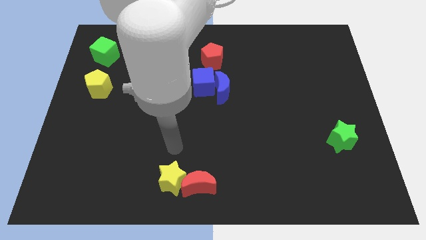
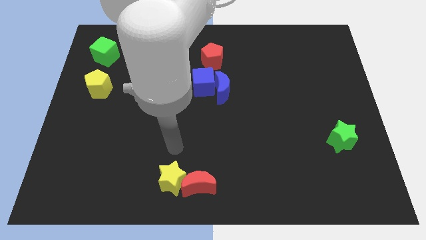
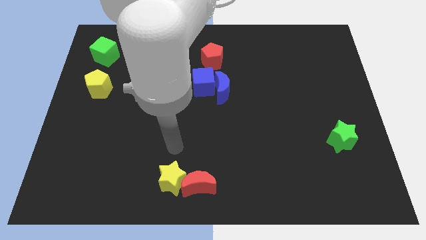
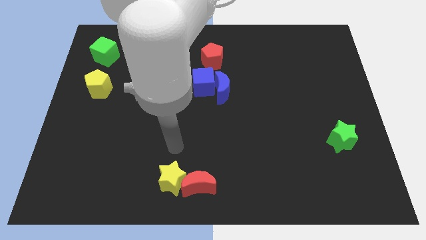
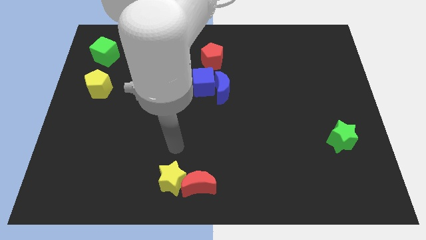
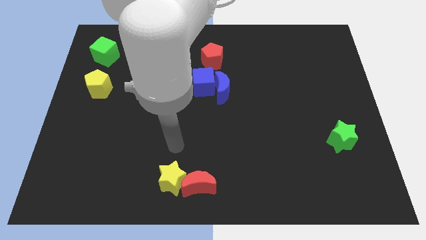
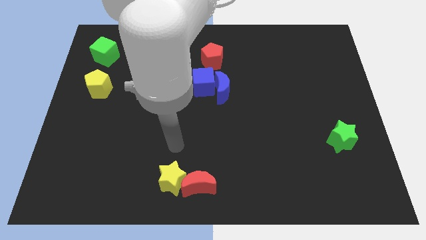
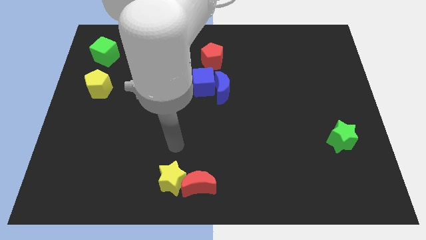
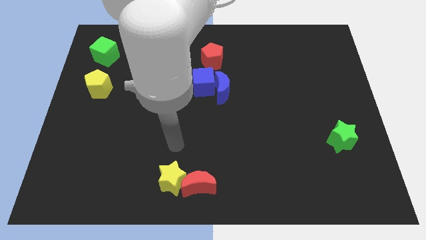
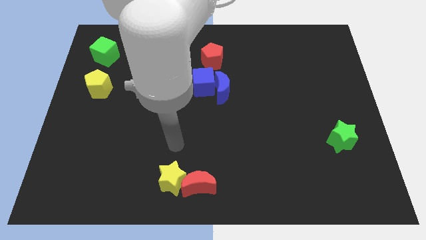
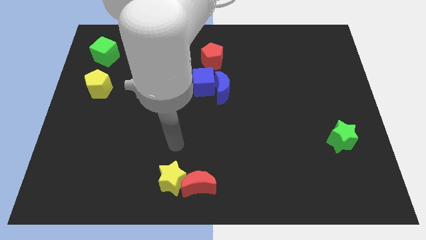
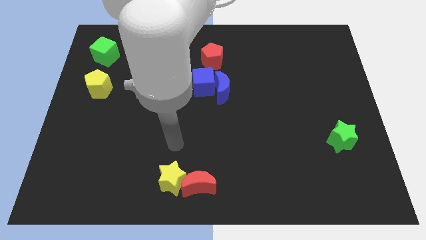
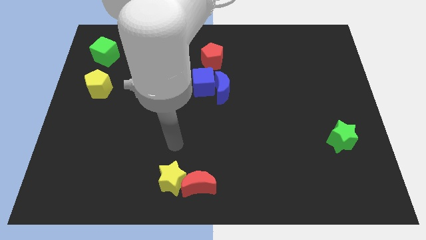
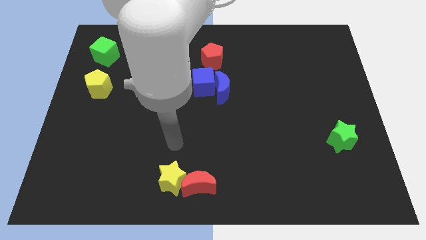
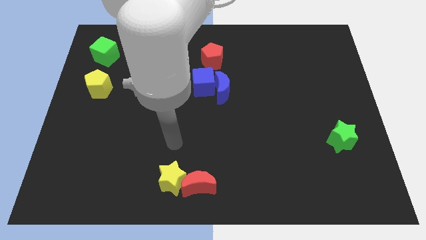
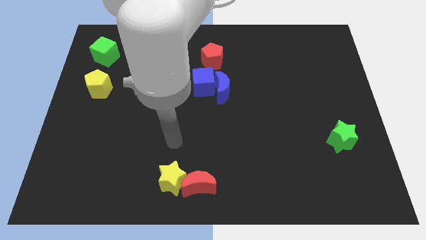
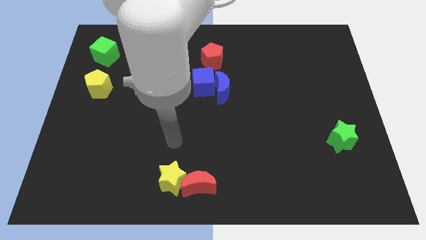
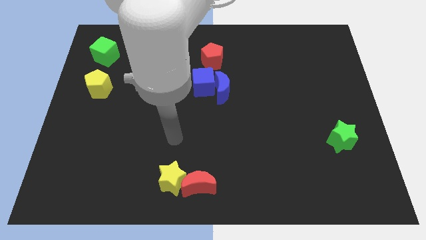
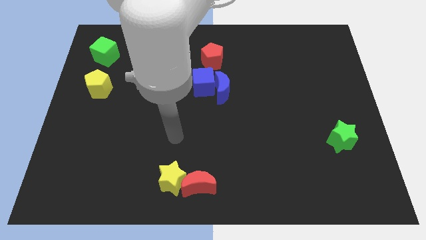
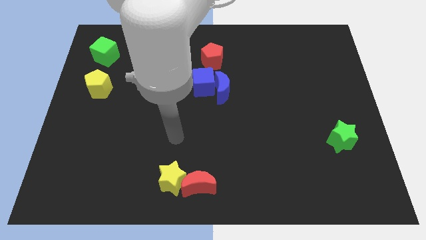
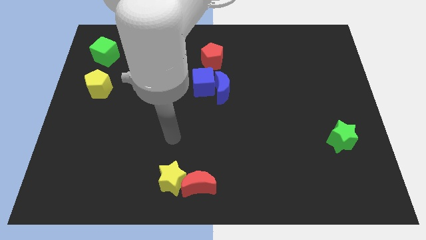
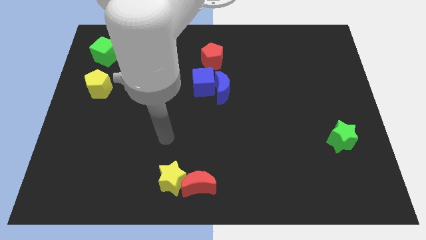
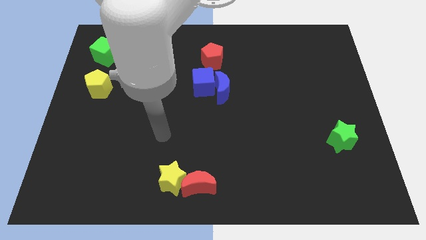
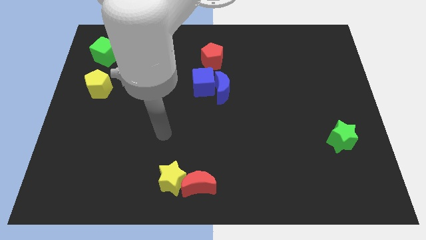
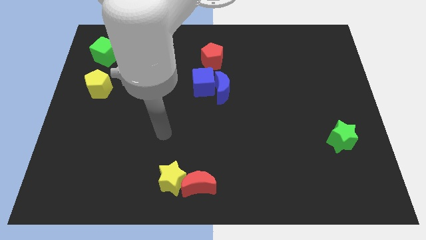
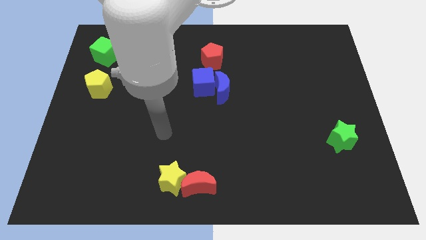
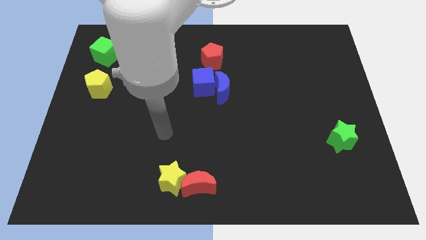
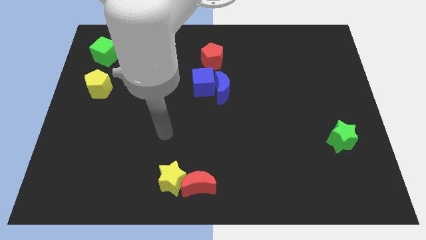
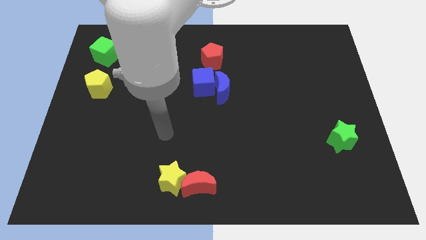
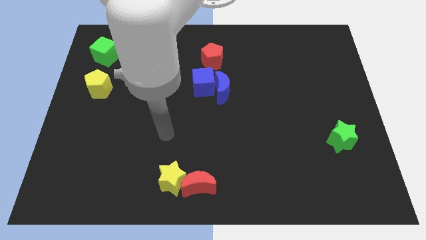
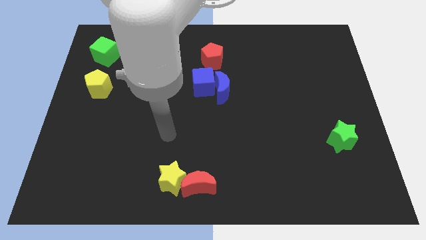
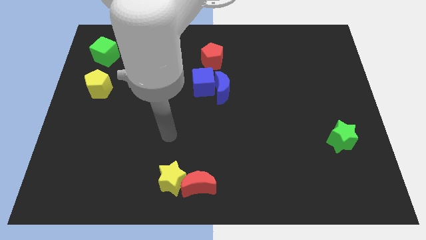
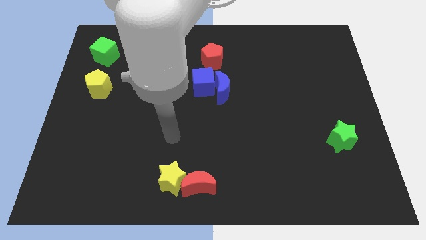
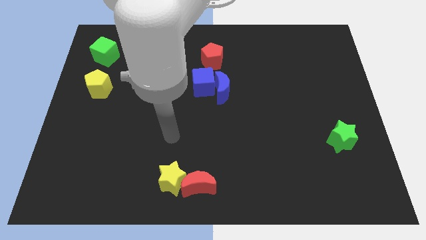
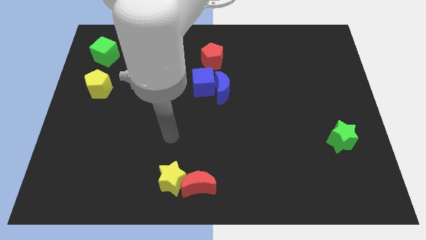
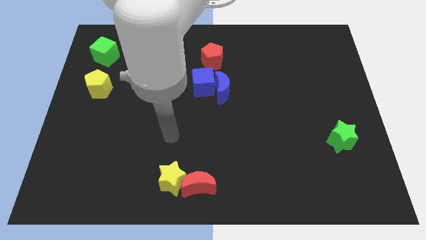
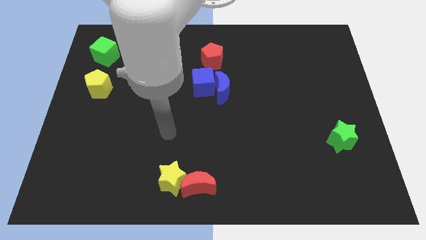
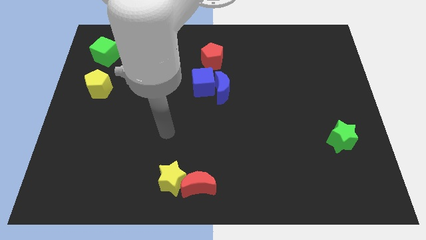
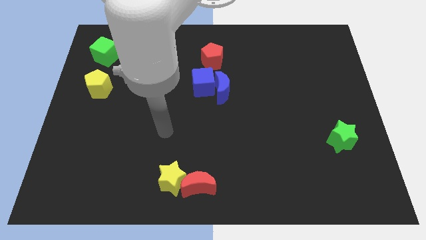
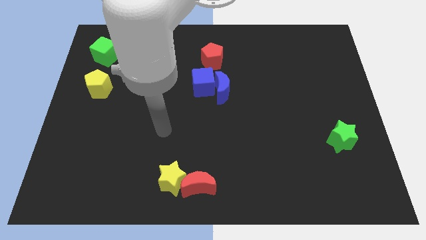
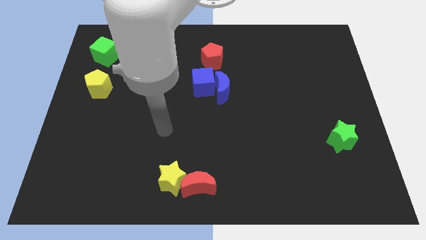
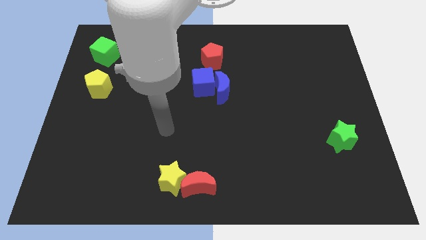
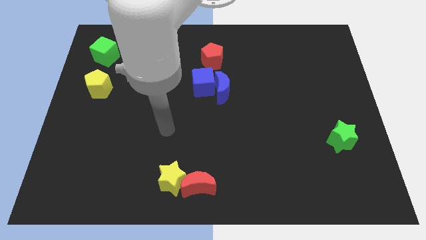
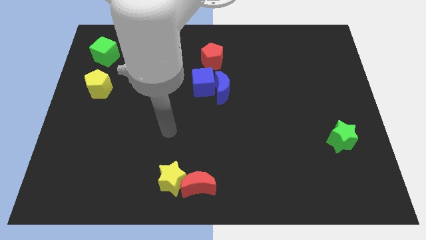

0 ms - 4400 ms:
slightly move your hand

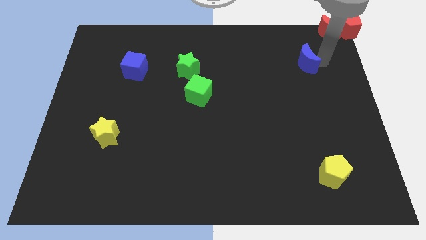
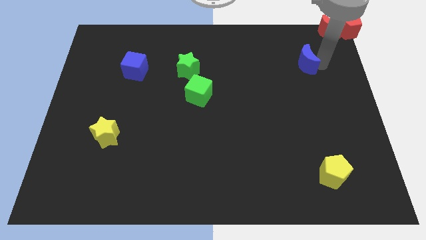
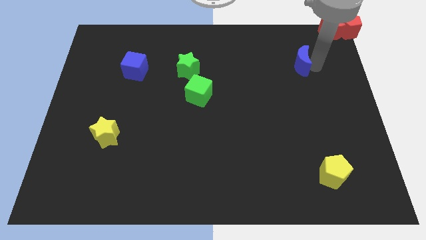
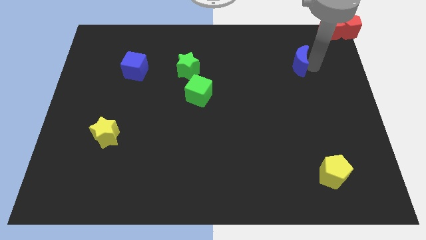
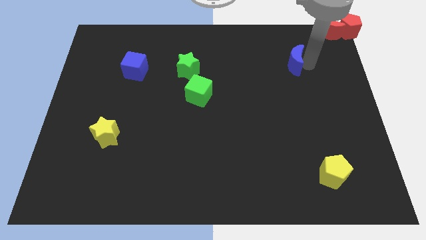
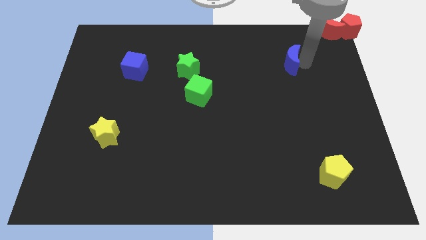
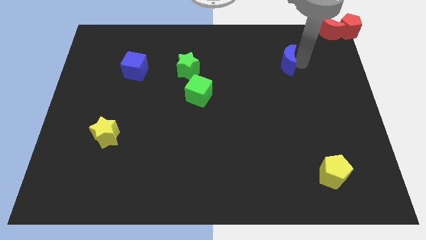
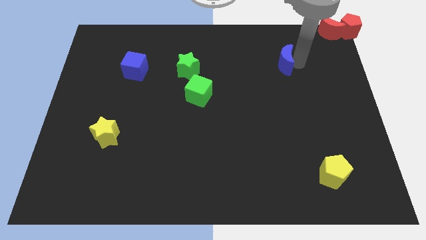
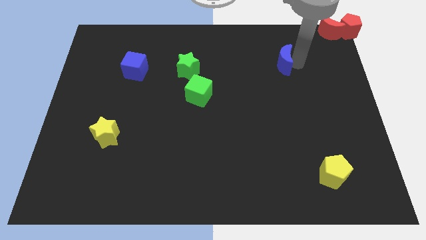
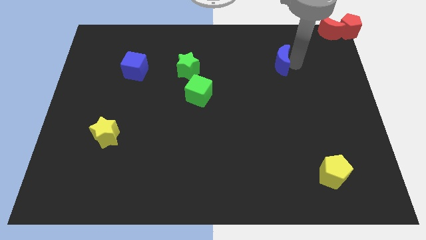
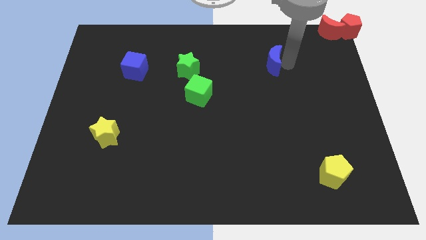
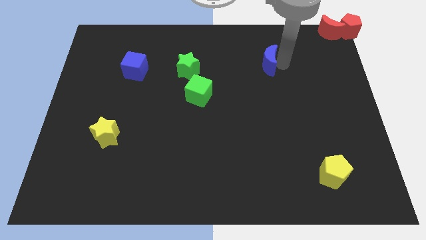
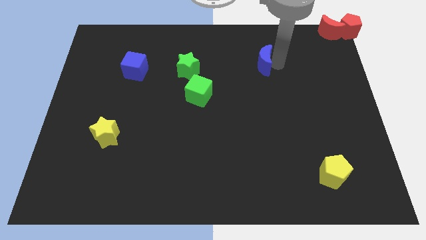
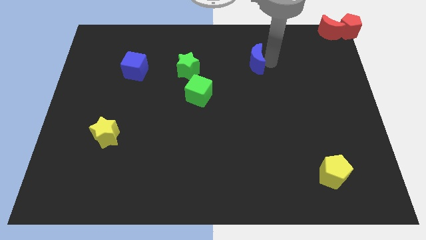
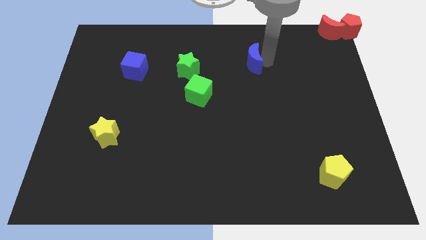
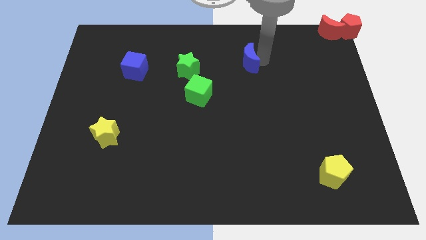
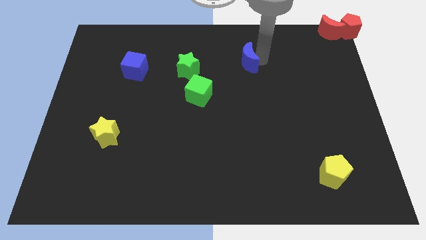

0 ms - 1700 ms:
slide the blue crescent slightly to the left

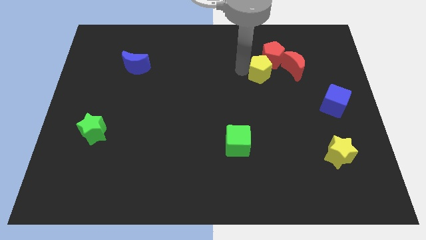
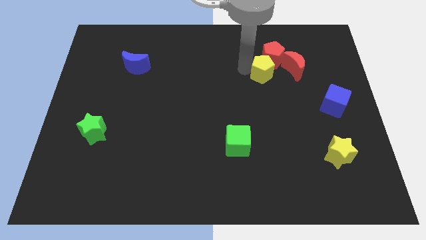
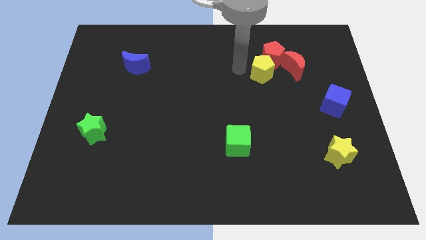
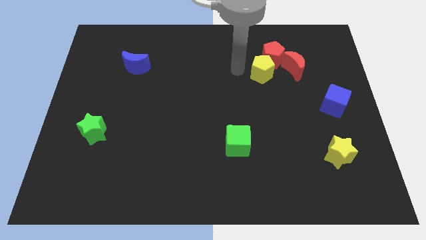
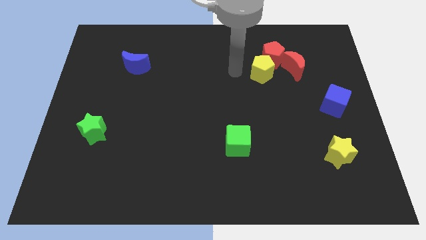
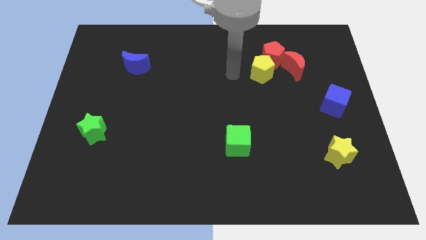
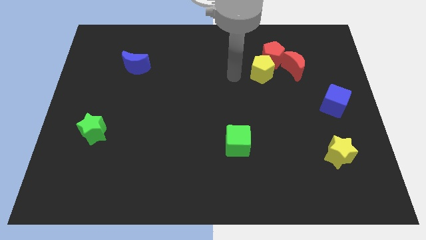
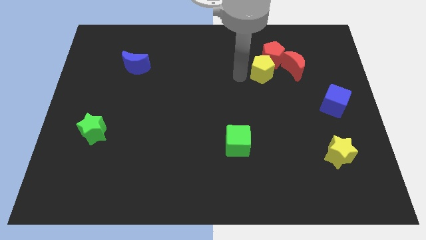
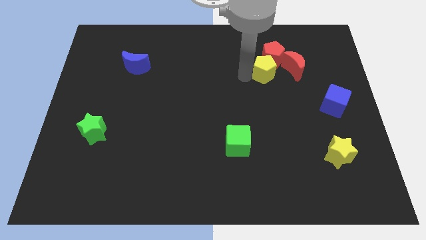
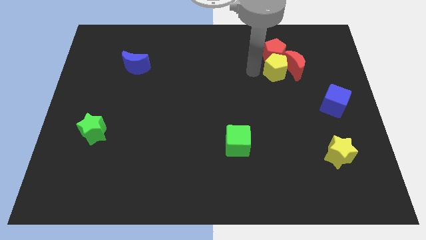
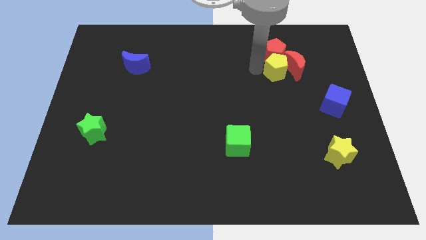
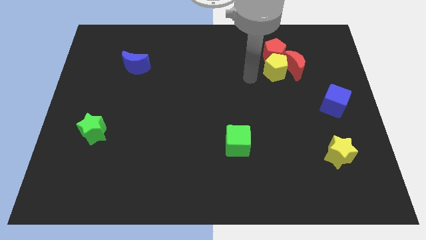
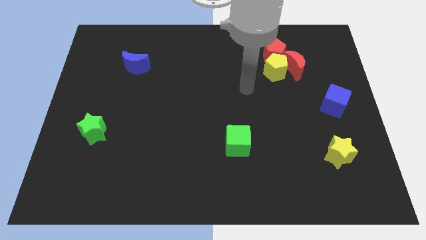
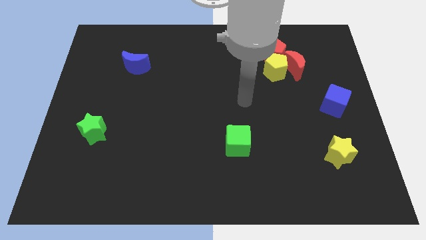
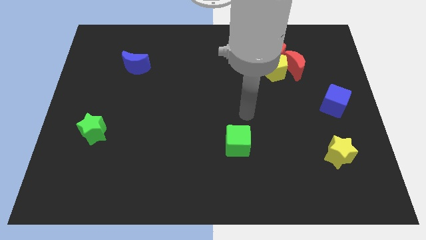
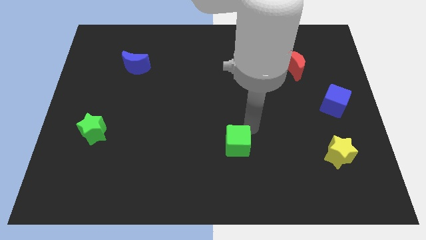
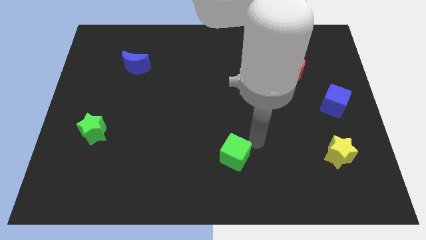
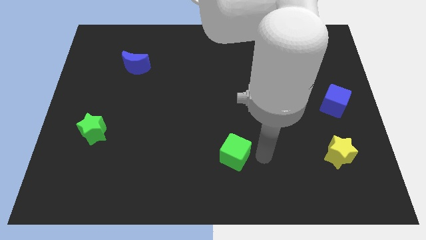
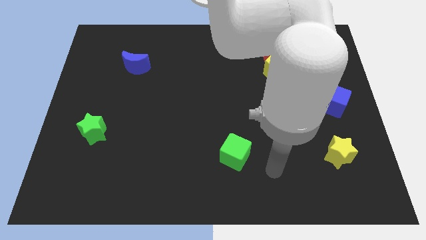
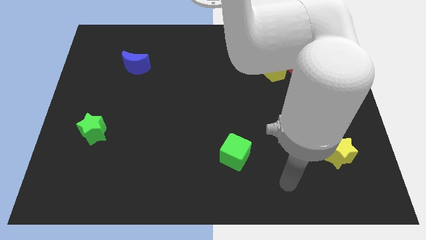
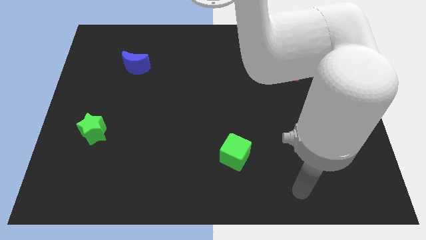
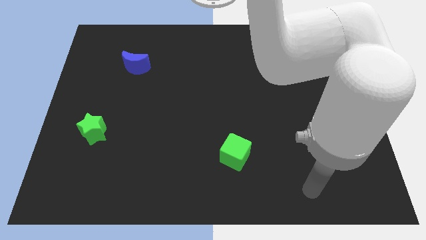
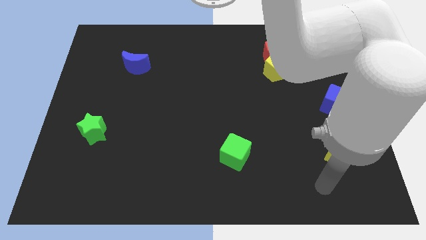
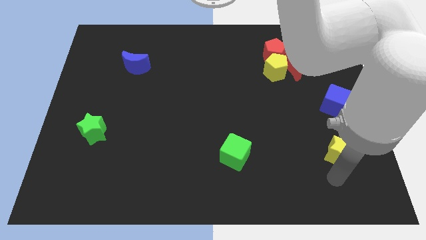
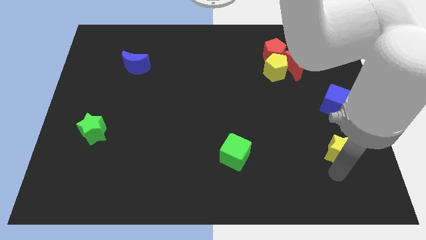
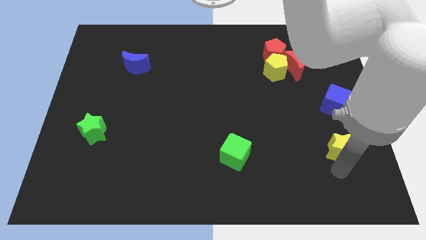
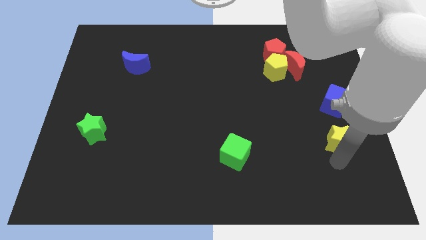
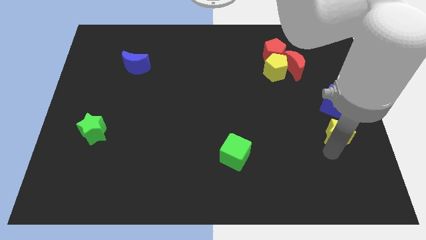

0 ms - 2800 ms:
slightly push the green cube towards the bottom center
